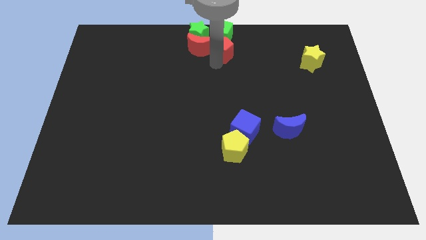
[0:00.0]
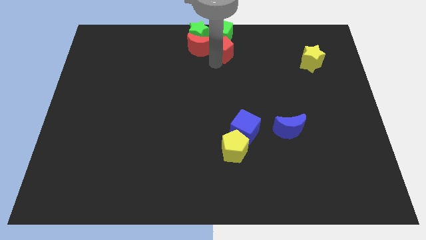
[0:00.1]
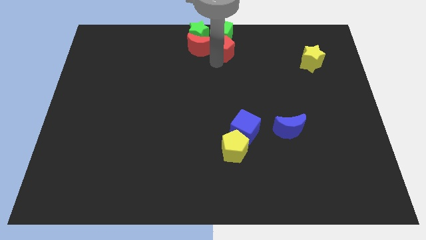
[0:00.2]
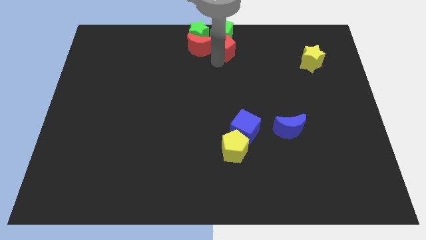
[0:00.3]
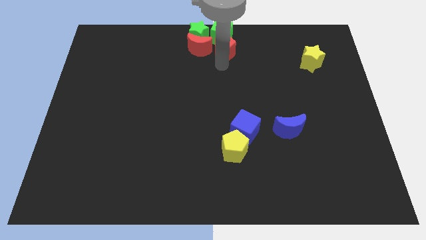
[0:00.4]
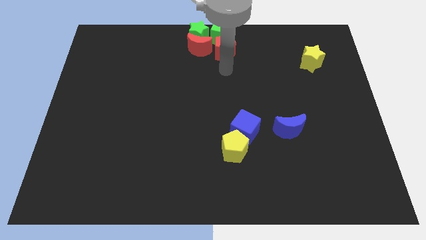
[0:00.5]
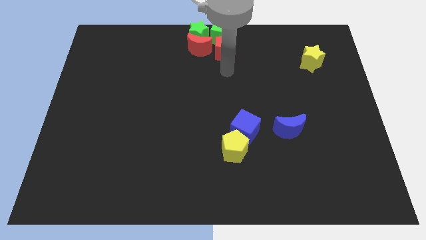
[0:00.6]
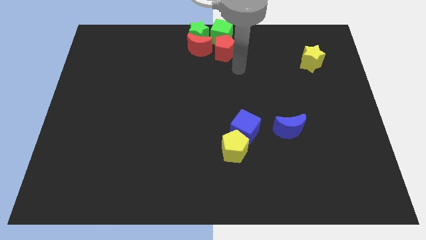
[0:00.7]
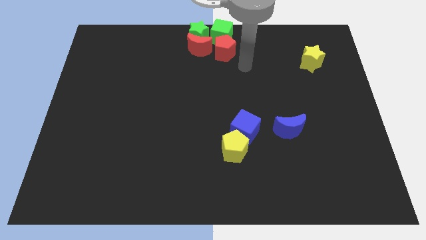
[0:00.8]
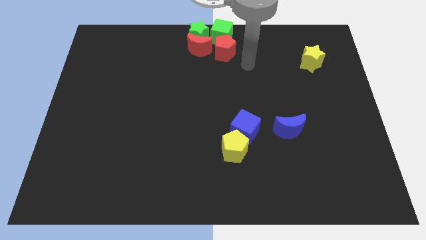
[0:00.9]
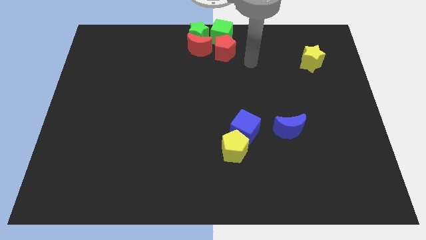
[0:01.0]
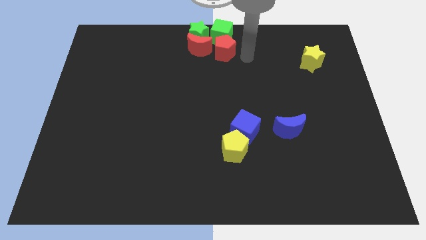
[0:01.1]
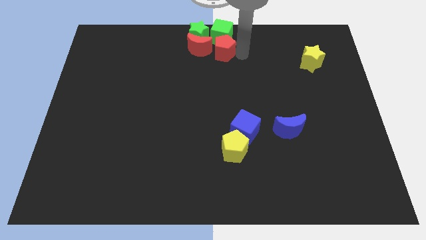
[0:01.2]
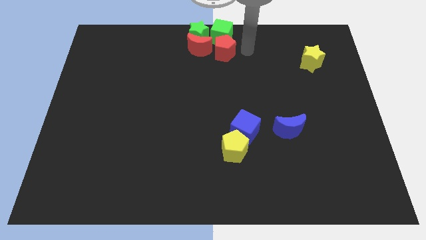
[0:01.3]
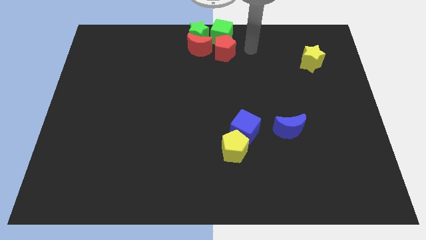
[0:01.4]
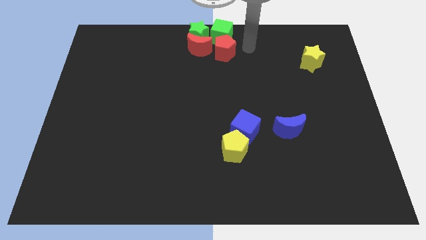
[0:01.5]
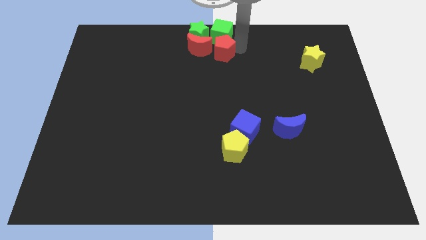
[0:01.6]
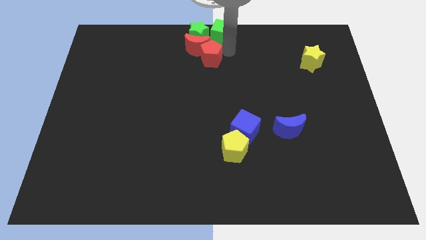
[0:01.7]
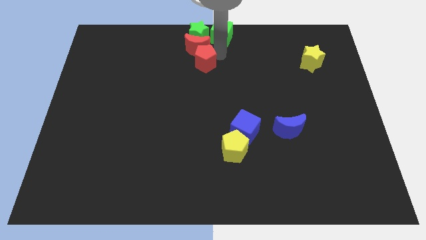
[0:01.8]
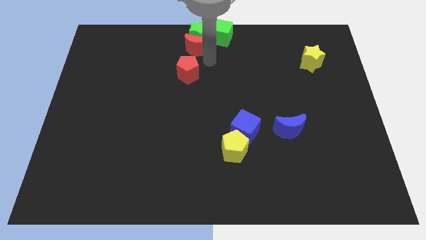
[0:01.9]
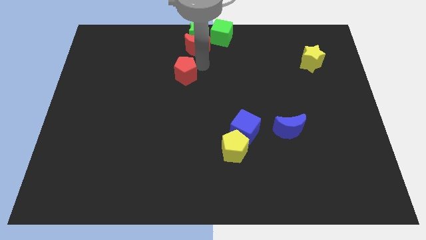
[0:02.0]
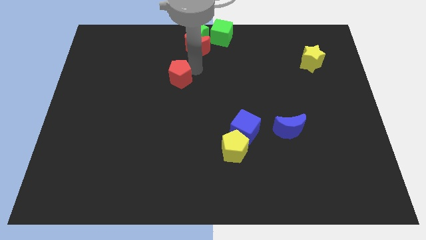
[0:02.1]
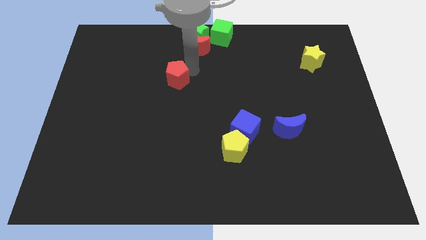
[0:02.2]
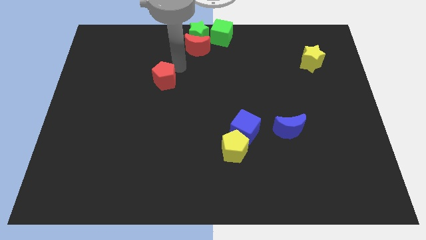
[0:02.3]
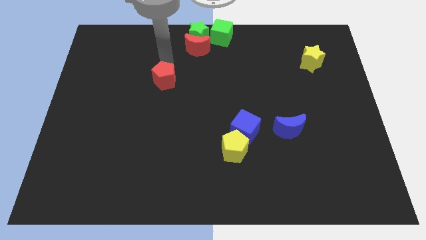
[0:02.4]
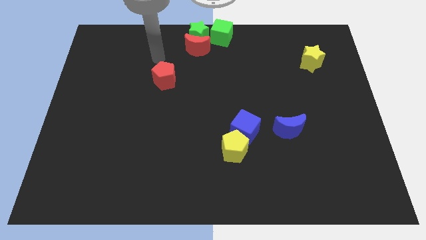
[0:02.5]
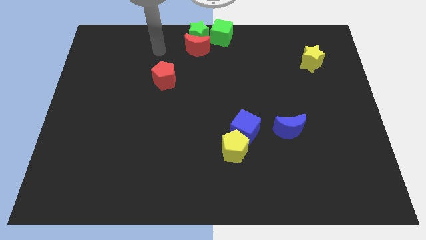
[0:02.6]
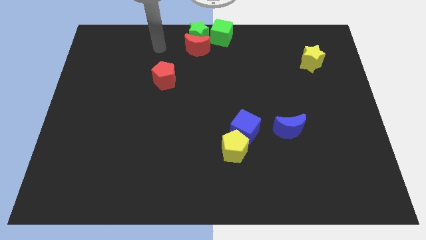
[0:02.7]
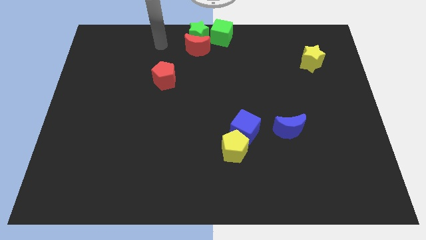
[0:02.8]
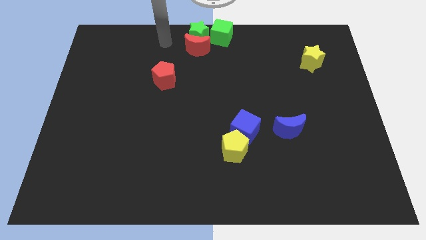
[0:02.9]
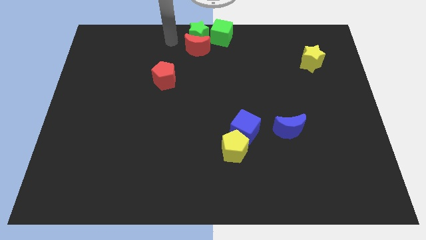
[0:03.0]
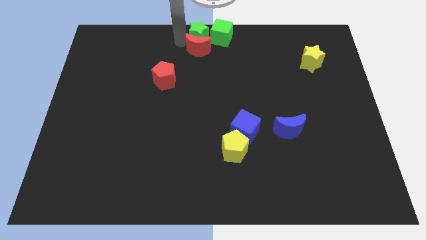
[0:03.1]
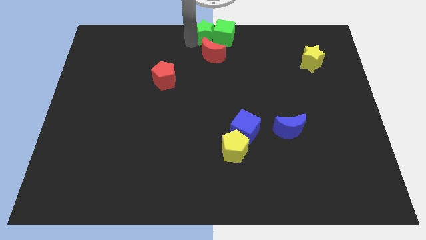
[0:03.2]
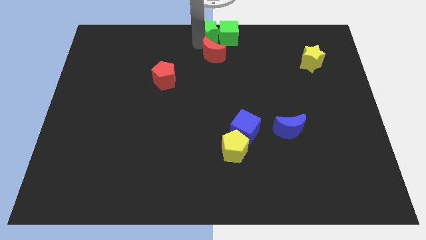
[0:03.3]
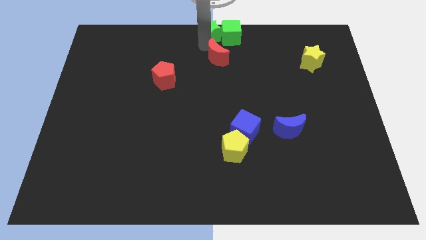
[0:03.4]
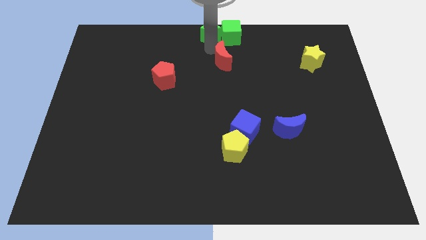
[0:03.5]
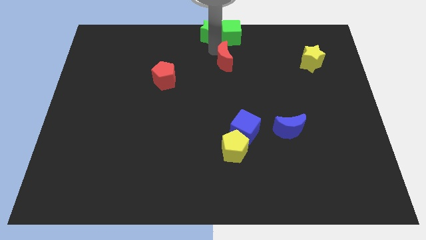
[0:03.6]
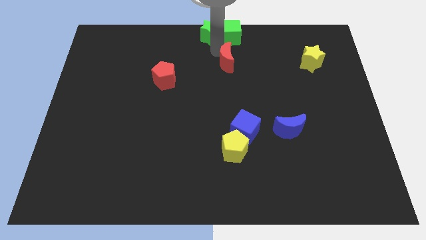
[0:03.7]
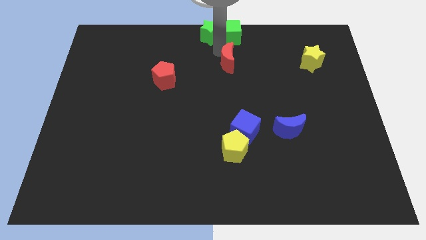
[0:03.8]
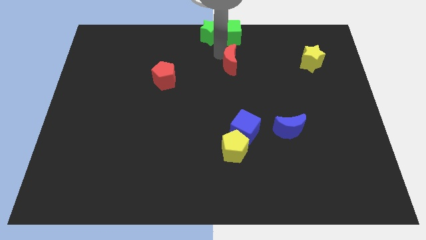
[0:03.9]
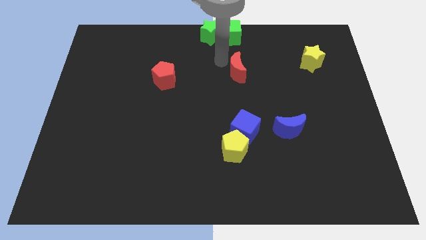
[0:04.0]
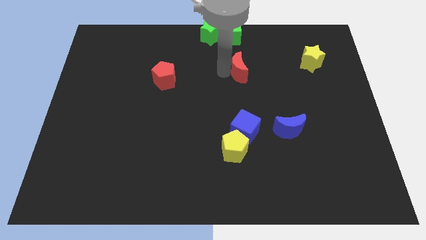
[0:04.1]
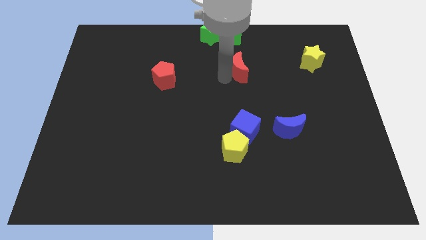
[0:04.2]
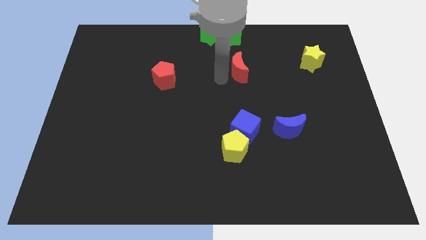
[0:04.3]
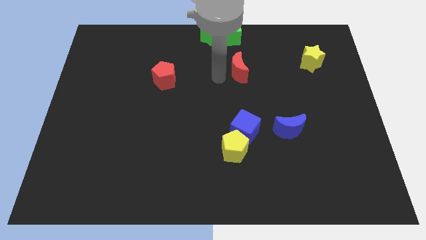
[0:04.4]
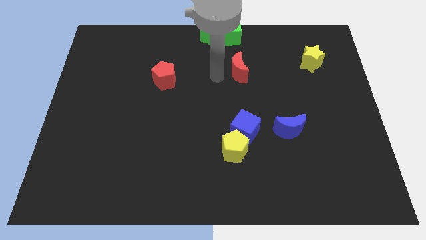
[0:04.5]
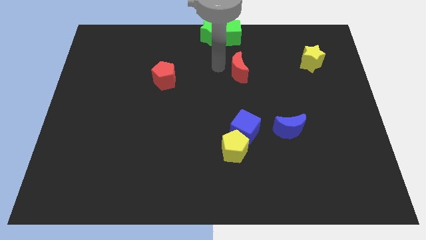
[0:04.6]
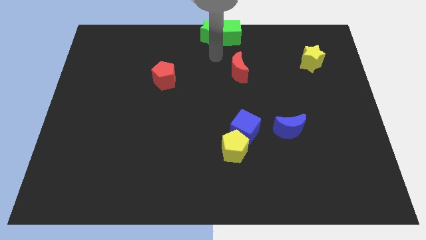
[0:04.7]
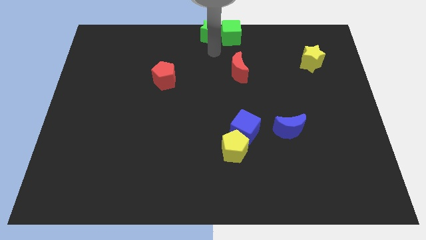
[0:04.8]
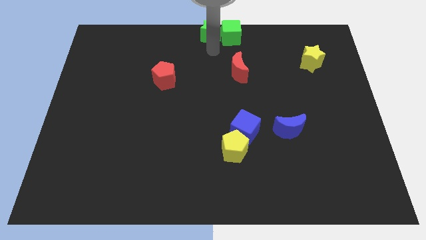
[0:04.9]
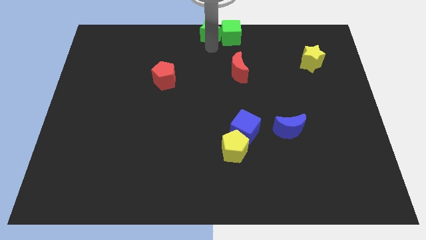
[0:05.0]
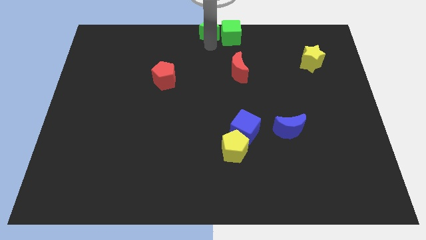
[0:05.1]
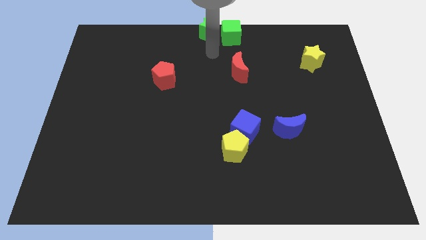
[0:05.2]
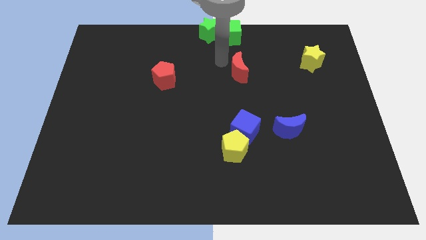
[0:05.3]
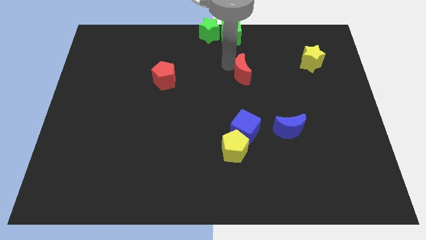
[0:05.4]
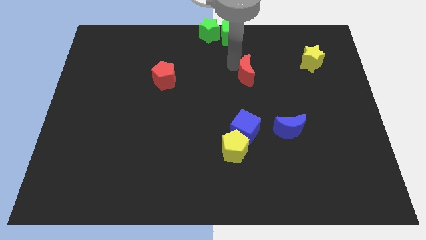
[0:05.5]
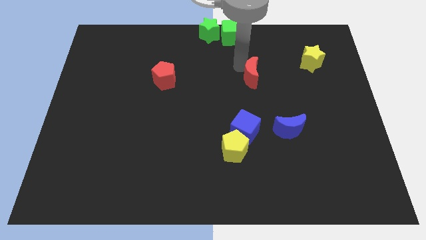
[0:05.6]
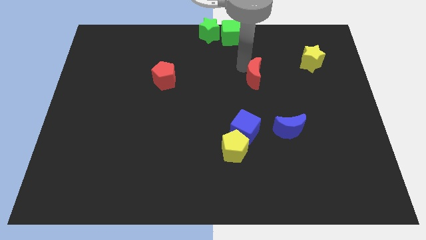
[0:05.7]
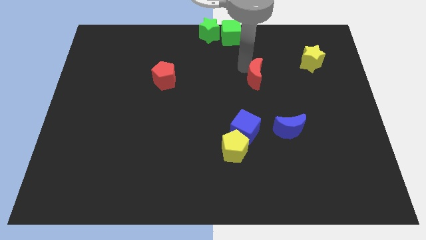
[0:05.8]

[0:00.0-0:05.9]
separate the red crescent and red pentagon

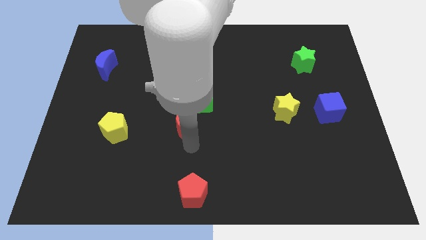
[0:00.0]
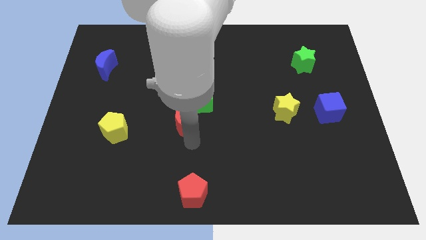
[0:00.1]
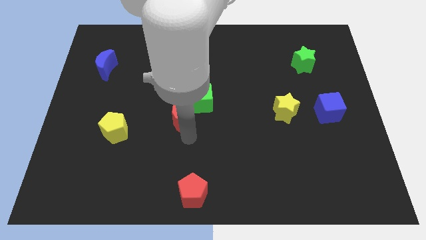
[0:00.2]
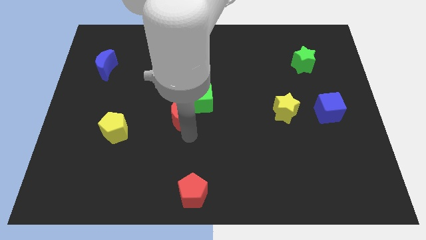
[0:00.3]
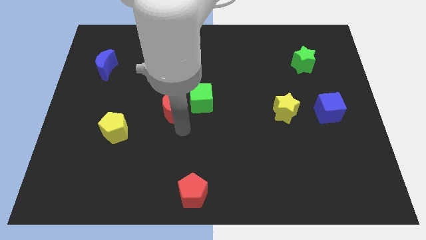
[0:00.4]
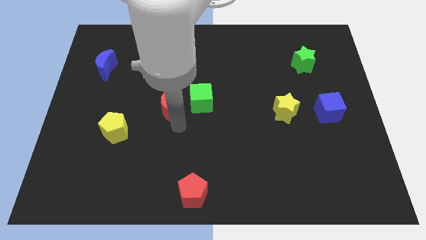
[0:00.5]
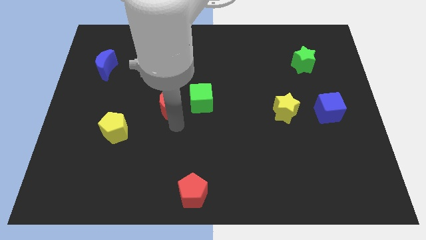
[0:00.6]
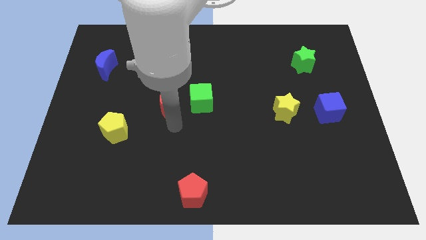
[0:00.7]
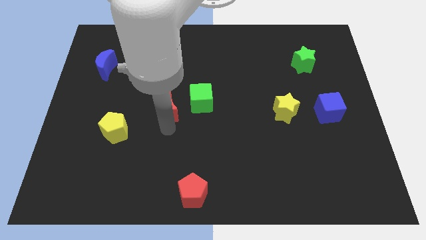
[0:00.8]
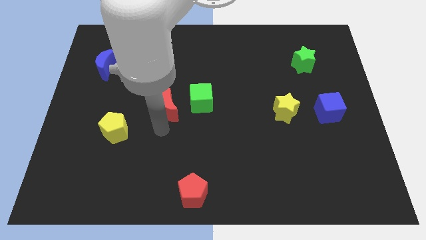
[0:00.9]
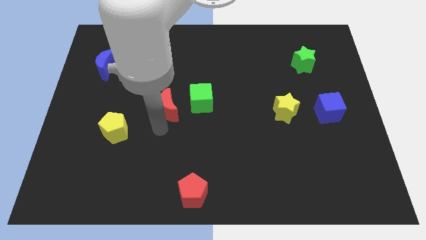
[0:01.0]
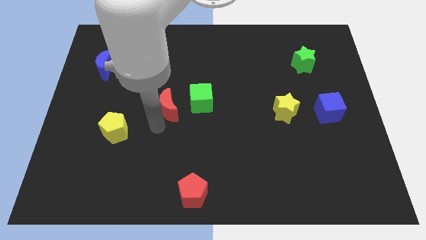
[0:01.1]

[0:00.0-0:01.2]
push the red crescent to the left of the green cube

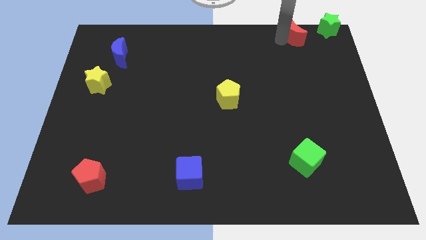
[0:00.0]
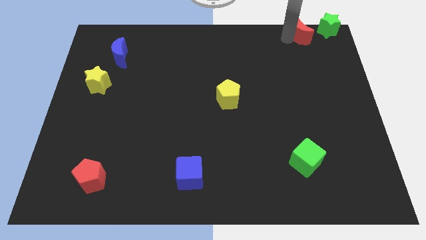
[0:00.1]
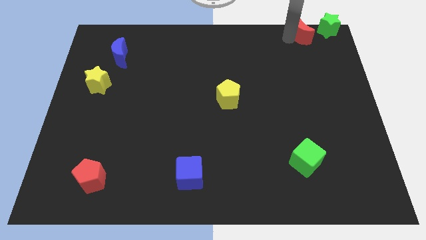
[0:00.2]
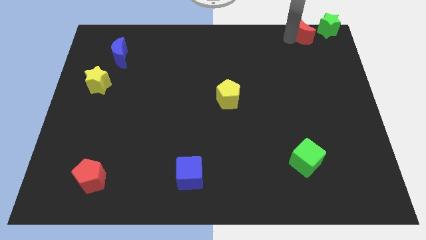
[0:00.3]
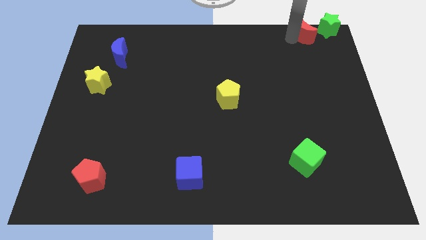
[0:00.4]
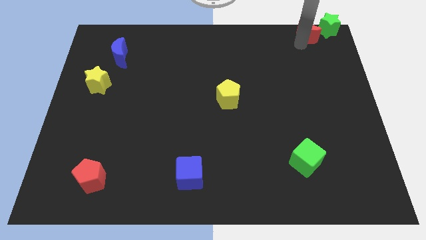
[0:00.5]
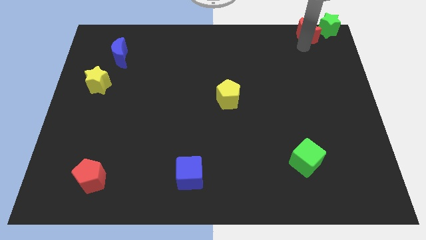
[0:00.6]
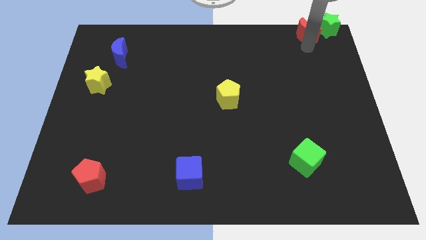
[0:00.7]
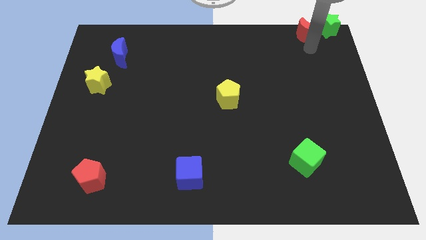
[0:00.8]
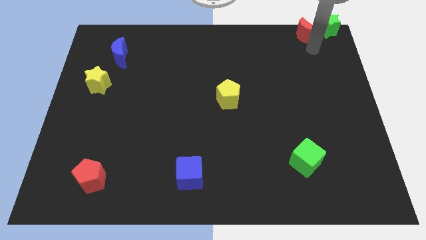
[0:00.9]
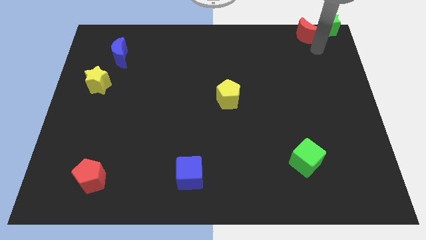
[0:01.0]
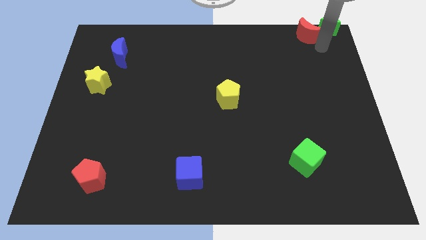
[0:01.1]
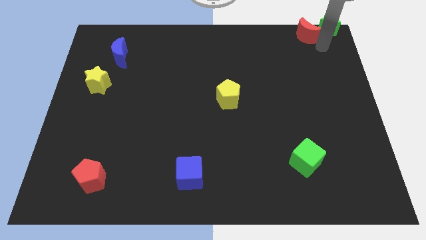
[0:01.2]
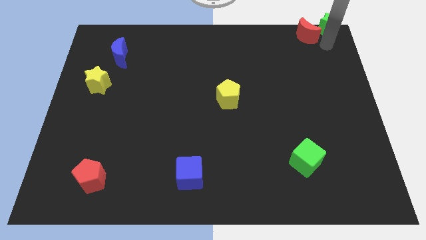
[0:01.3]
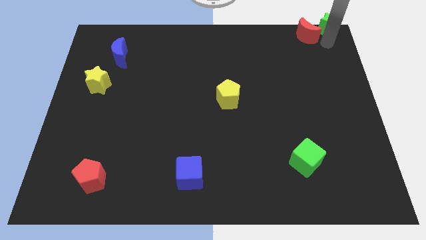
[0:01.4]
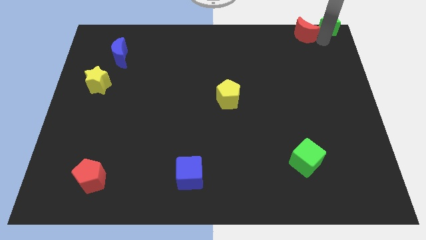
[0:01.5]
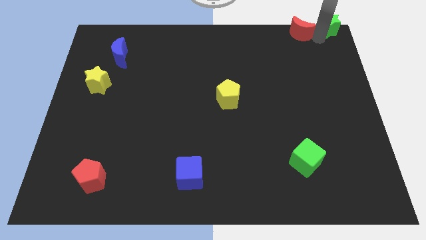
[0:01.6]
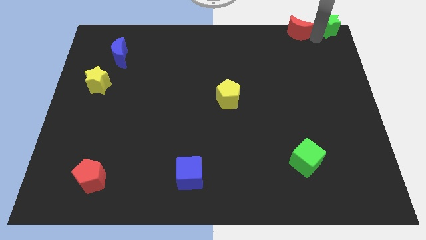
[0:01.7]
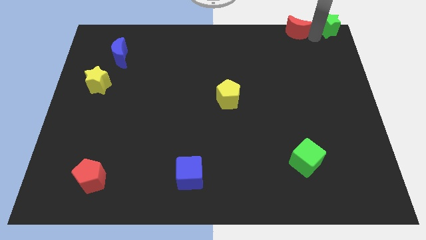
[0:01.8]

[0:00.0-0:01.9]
place the red crescent left to the green star
